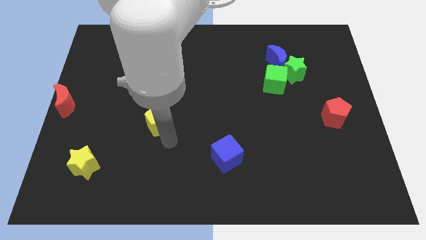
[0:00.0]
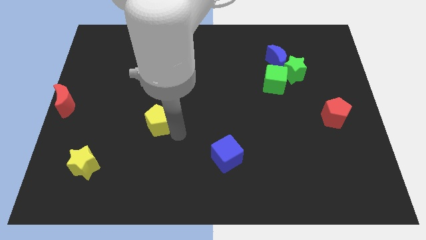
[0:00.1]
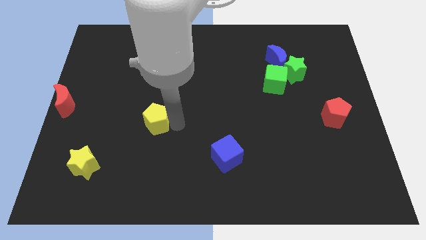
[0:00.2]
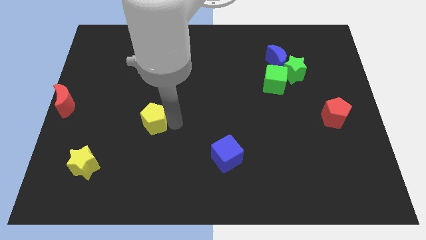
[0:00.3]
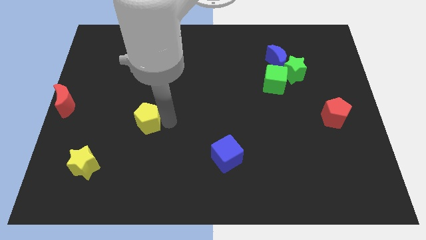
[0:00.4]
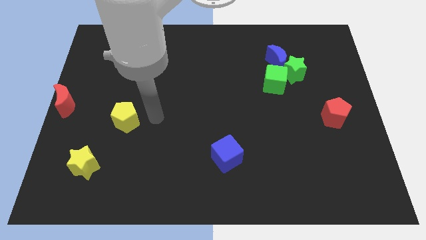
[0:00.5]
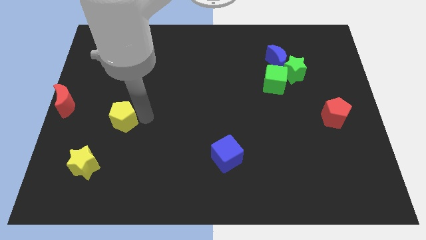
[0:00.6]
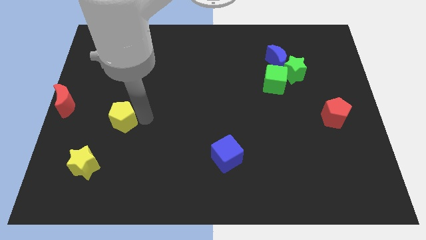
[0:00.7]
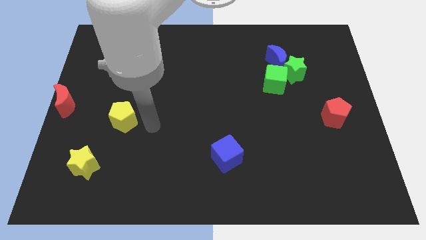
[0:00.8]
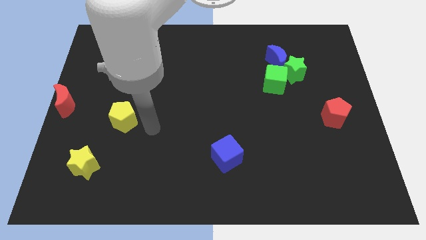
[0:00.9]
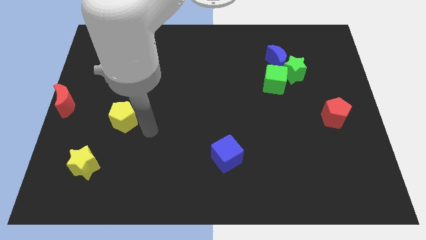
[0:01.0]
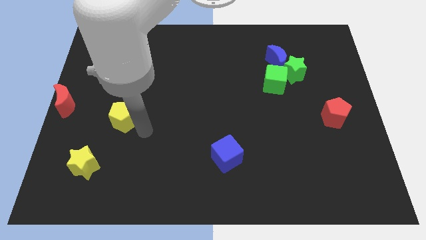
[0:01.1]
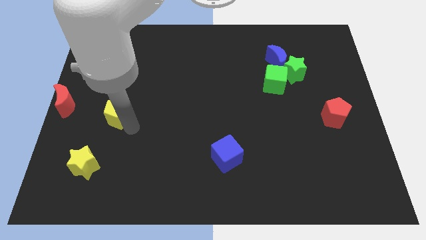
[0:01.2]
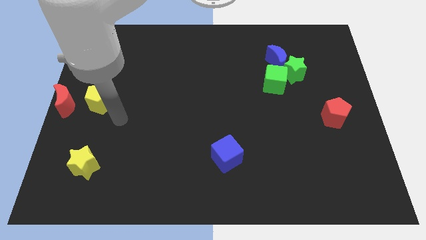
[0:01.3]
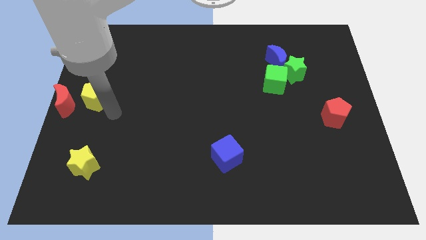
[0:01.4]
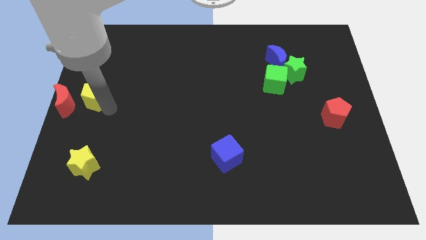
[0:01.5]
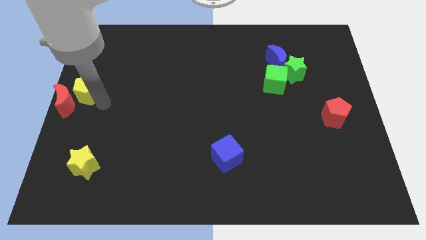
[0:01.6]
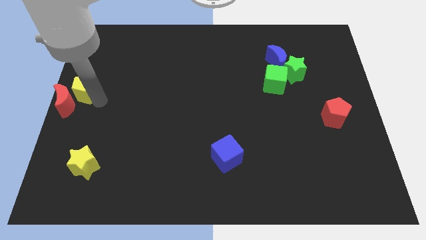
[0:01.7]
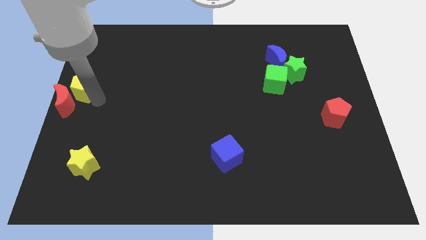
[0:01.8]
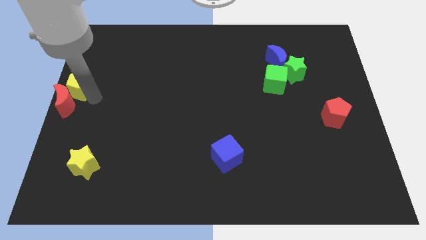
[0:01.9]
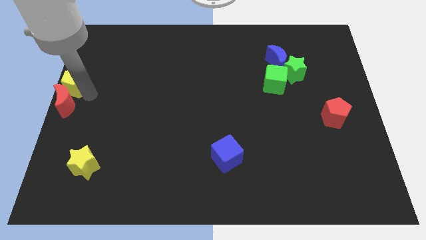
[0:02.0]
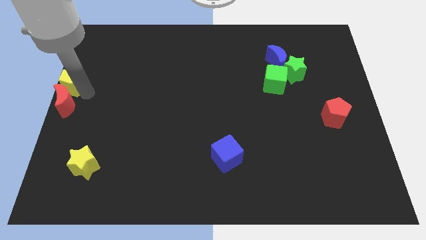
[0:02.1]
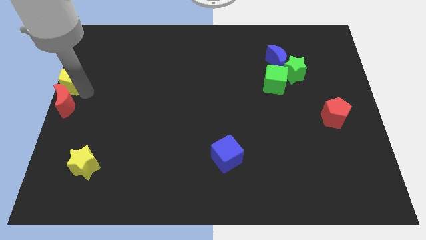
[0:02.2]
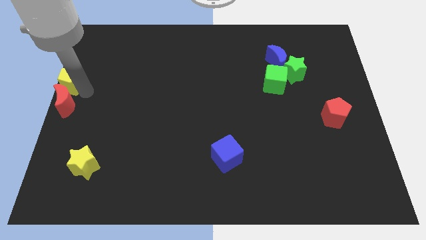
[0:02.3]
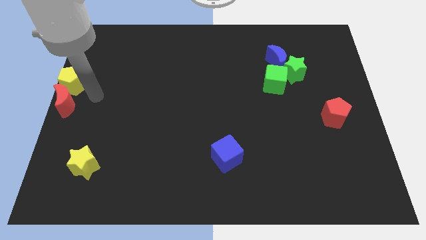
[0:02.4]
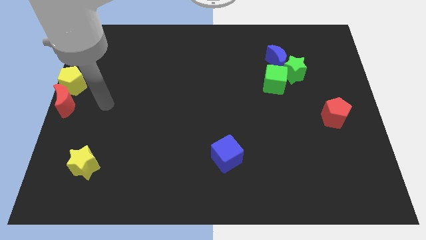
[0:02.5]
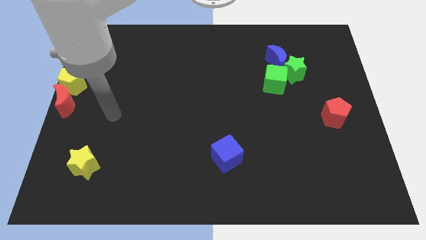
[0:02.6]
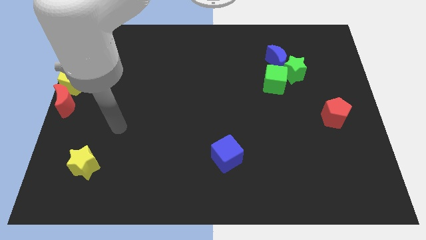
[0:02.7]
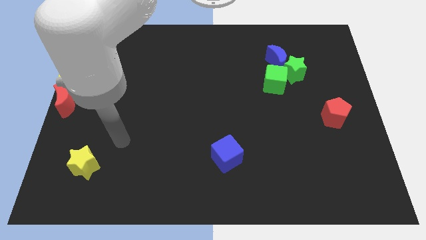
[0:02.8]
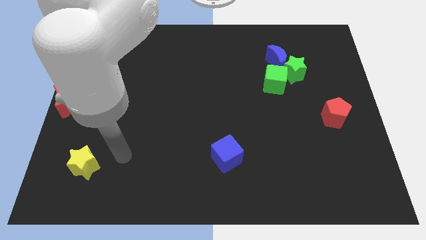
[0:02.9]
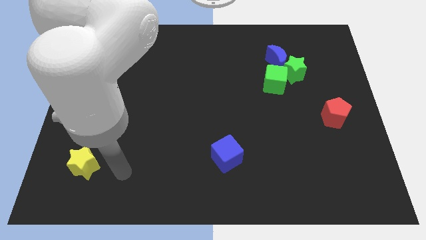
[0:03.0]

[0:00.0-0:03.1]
push yellow pentagon above the red crescent

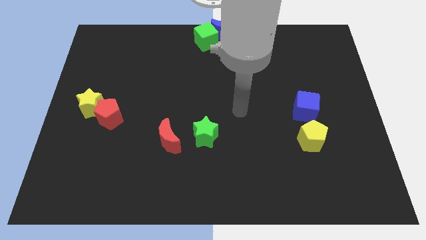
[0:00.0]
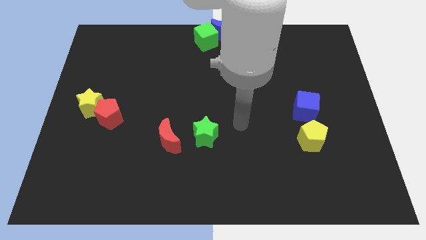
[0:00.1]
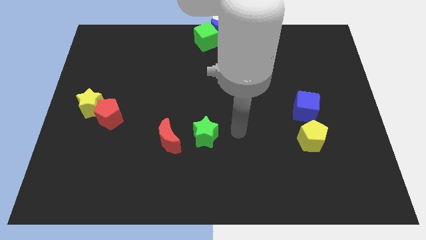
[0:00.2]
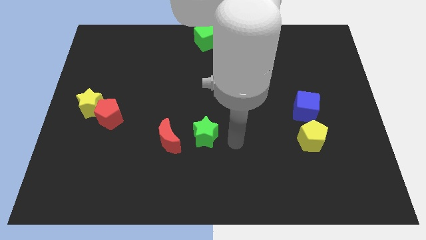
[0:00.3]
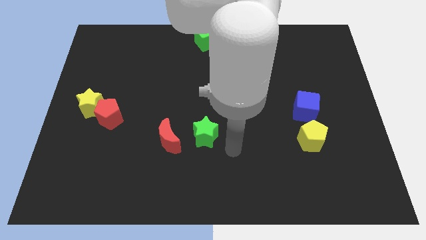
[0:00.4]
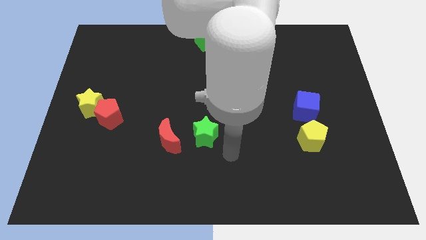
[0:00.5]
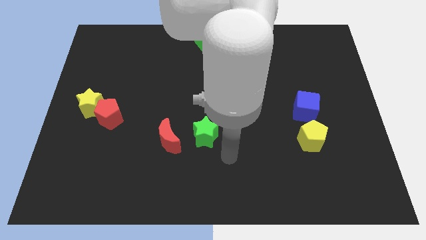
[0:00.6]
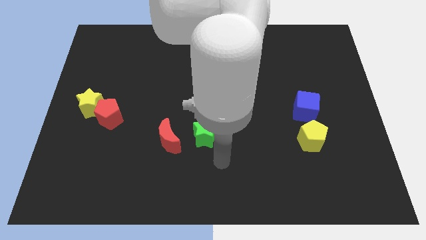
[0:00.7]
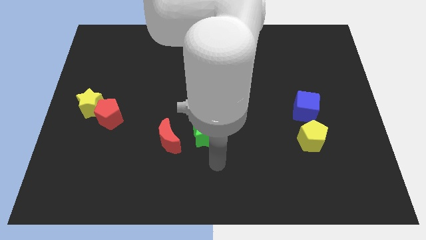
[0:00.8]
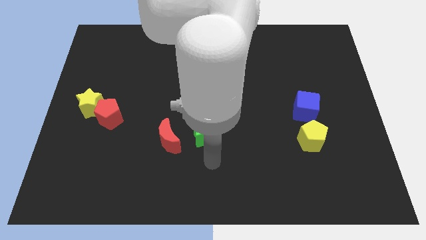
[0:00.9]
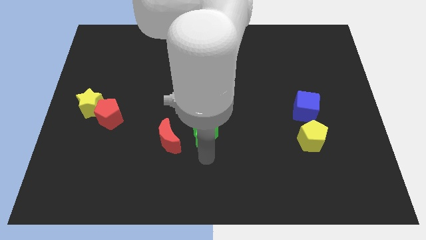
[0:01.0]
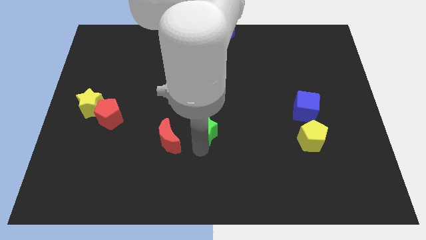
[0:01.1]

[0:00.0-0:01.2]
place your arm below green star

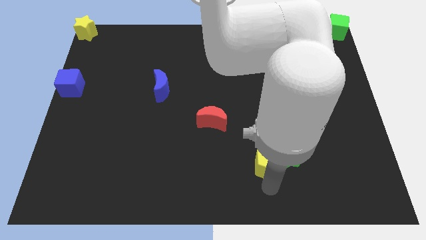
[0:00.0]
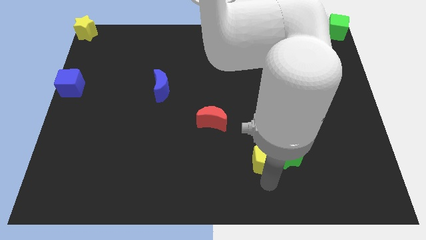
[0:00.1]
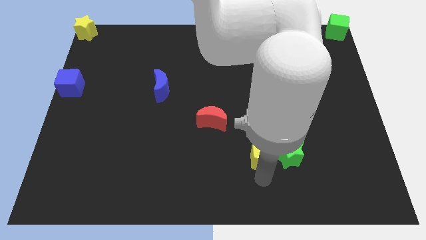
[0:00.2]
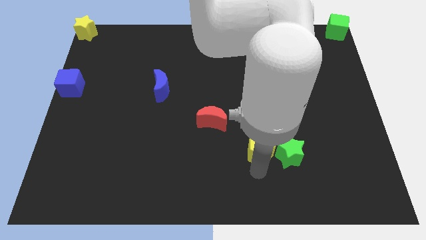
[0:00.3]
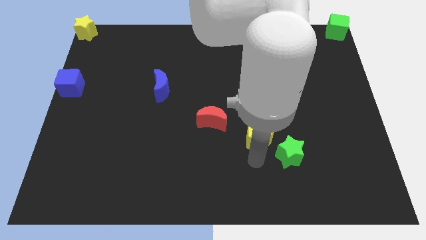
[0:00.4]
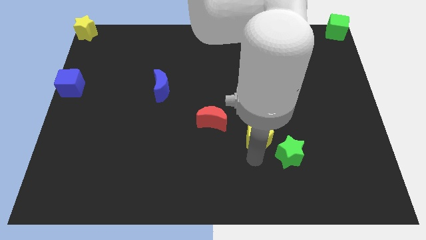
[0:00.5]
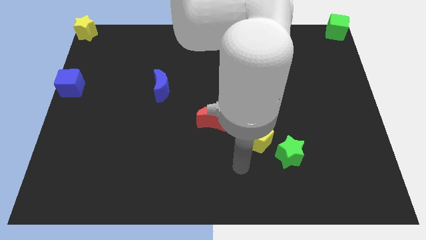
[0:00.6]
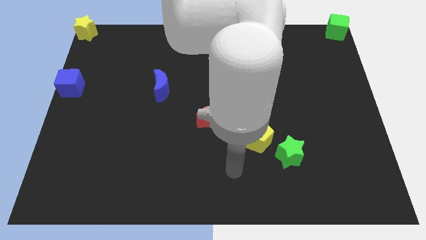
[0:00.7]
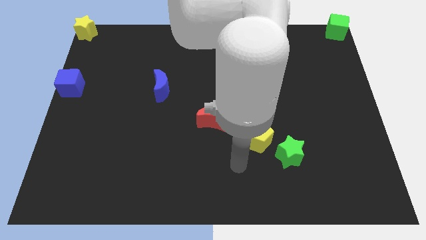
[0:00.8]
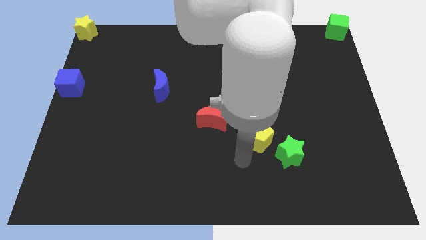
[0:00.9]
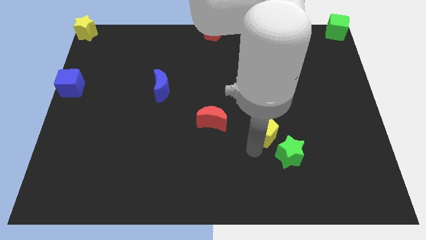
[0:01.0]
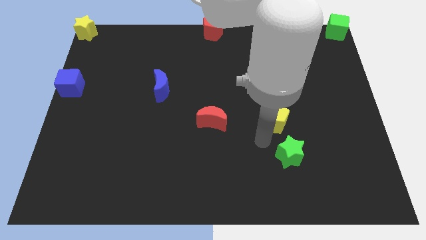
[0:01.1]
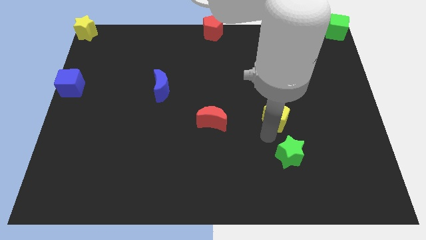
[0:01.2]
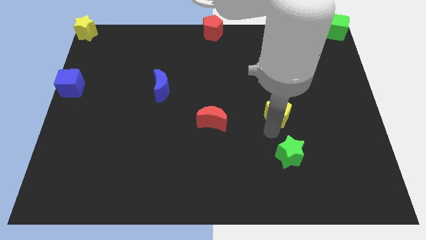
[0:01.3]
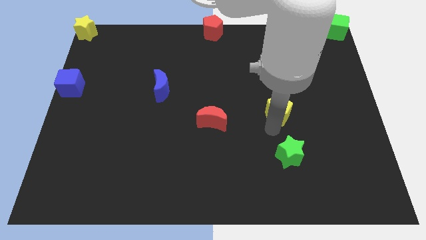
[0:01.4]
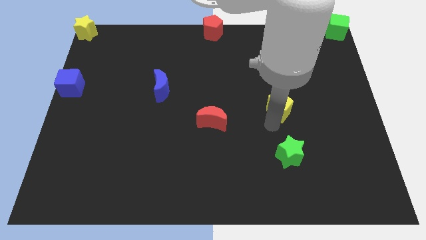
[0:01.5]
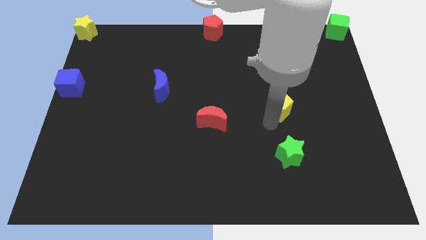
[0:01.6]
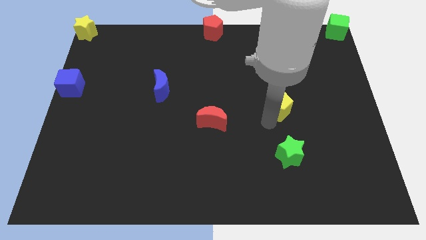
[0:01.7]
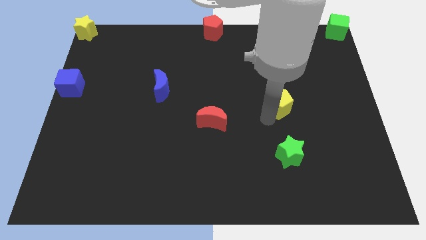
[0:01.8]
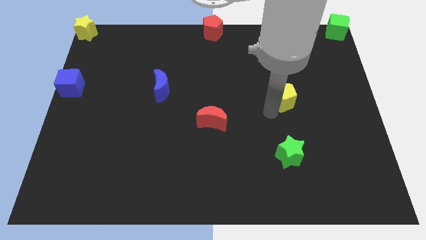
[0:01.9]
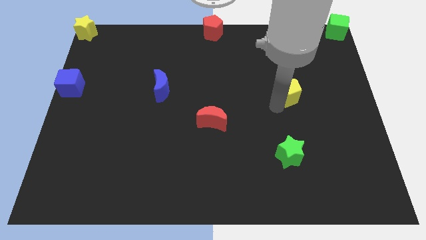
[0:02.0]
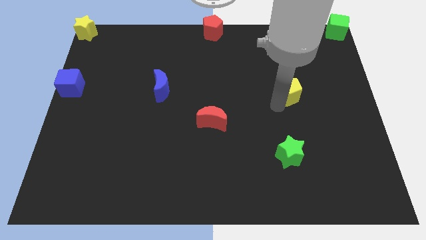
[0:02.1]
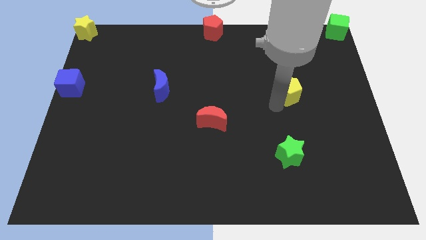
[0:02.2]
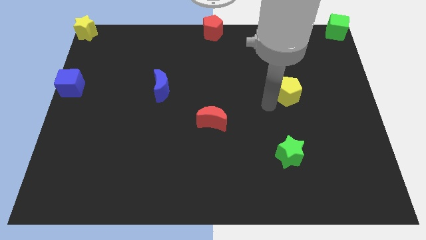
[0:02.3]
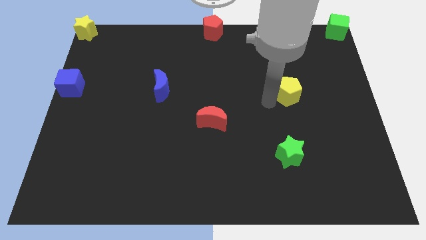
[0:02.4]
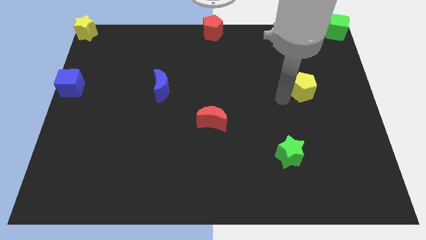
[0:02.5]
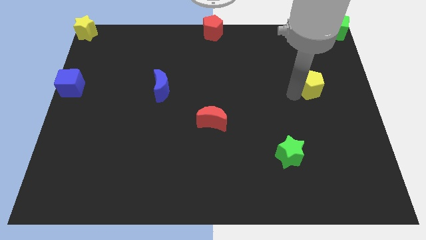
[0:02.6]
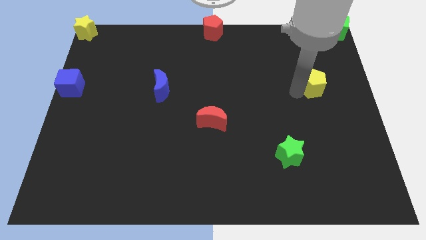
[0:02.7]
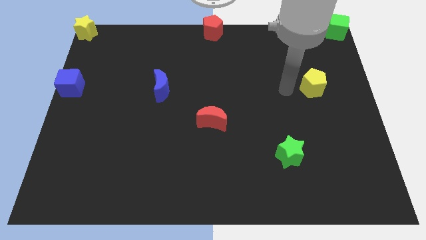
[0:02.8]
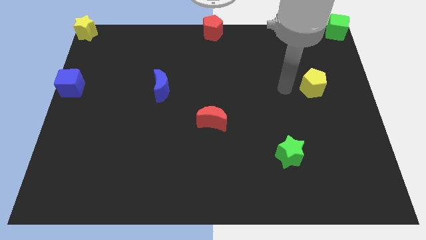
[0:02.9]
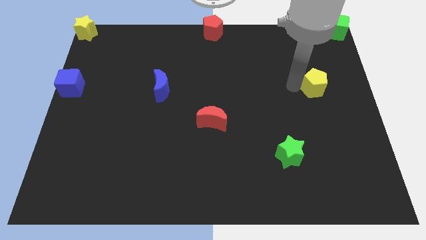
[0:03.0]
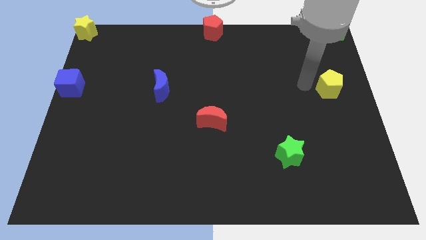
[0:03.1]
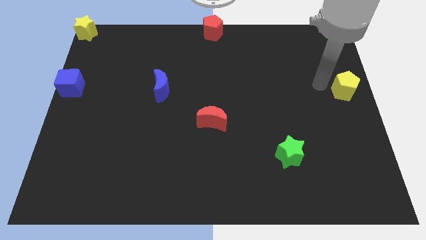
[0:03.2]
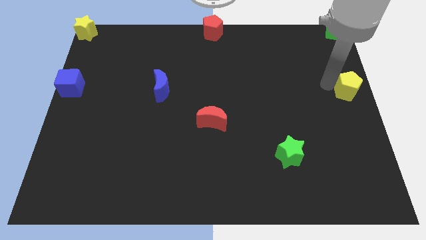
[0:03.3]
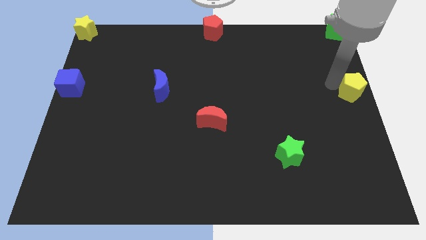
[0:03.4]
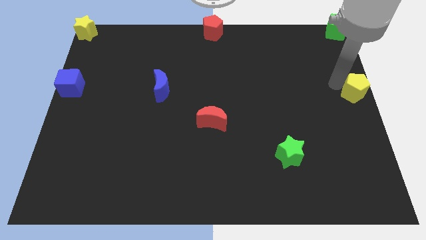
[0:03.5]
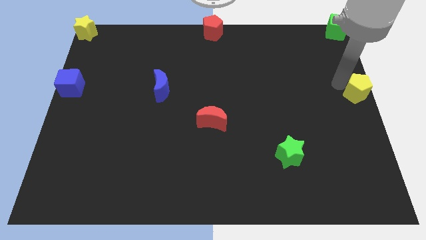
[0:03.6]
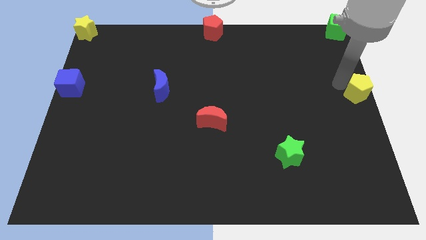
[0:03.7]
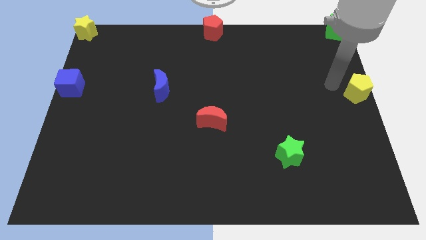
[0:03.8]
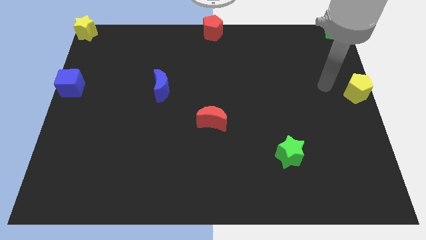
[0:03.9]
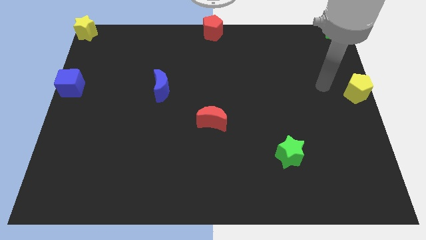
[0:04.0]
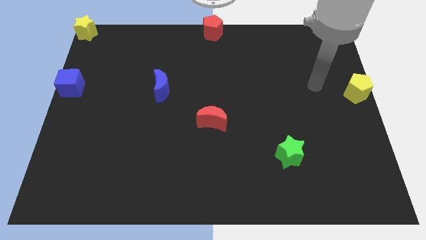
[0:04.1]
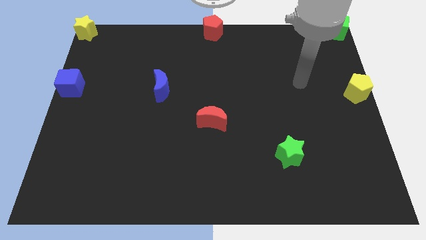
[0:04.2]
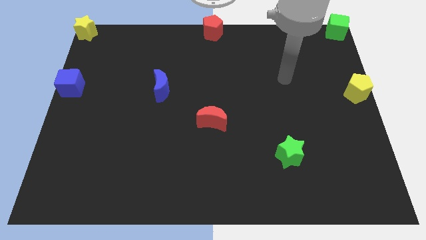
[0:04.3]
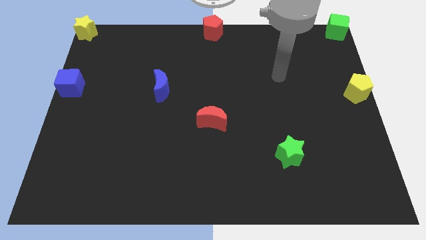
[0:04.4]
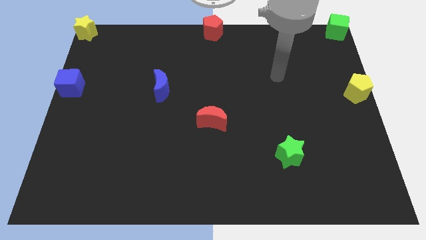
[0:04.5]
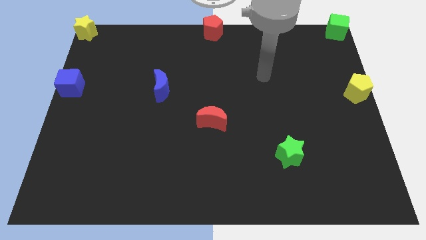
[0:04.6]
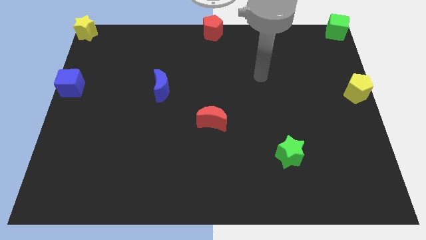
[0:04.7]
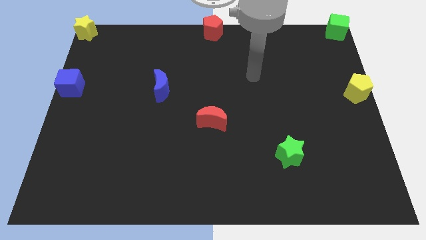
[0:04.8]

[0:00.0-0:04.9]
place the yellow pentagon to the center right of the board
